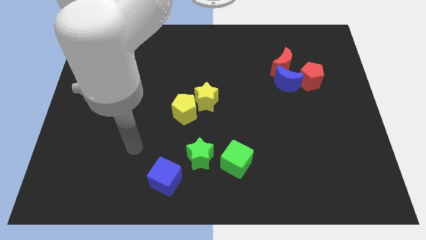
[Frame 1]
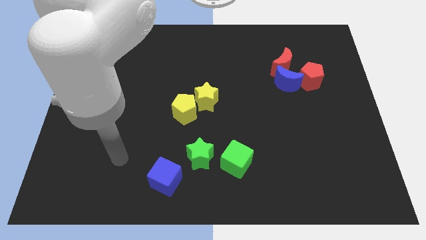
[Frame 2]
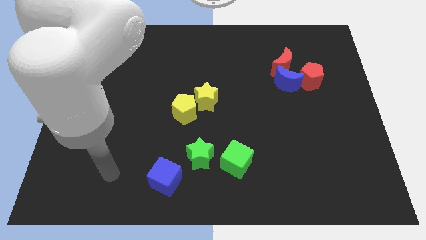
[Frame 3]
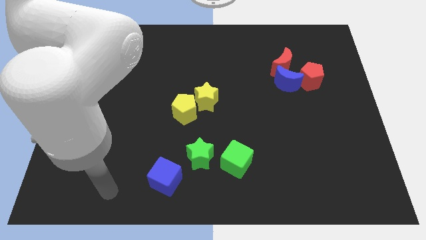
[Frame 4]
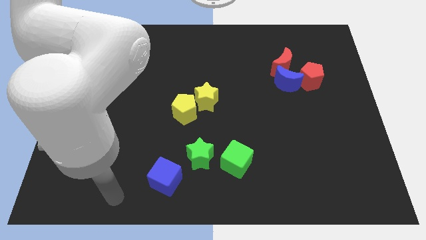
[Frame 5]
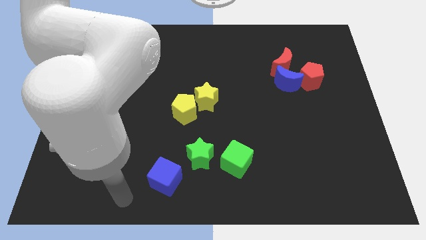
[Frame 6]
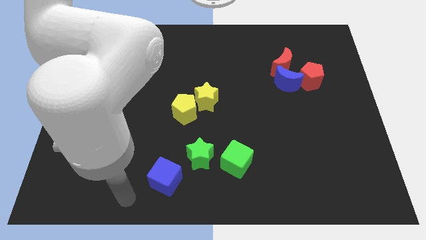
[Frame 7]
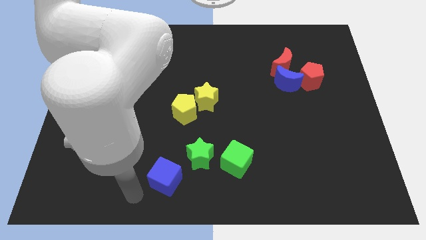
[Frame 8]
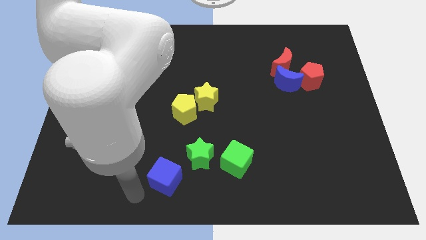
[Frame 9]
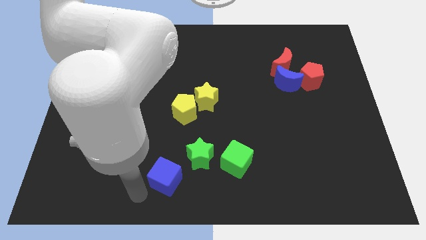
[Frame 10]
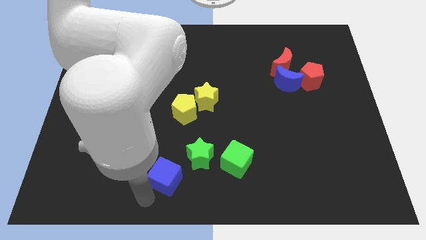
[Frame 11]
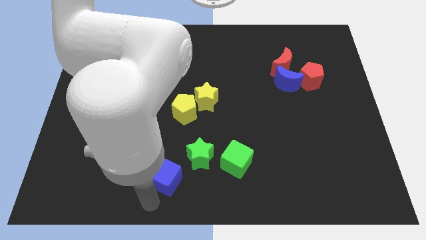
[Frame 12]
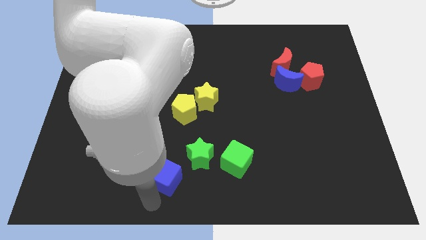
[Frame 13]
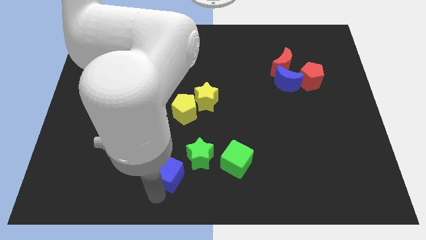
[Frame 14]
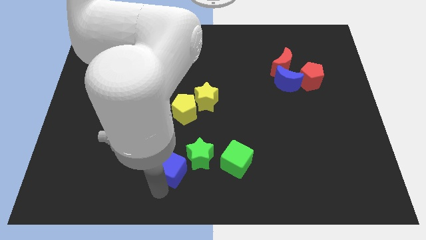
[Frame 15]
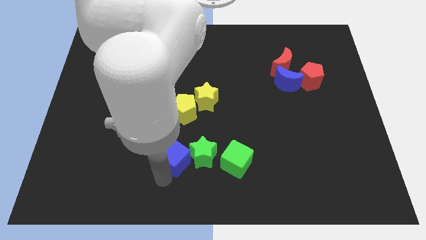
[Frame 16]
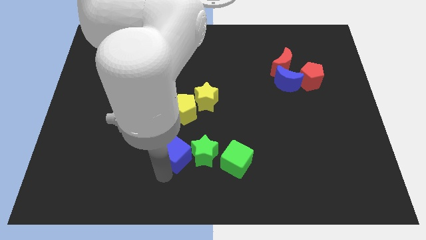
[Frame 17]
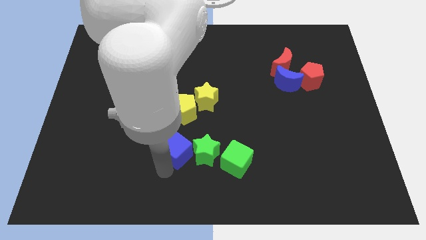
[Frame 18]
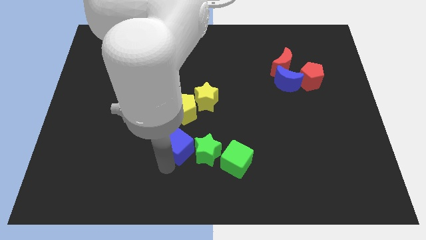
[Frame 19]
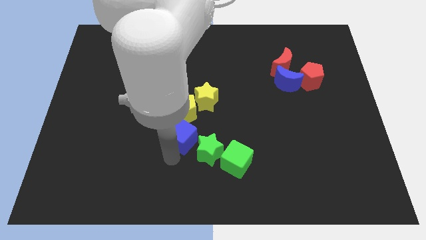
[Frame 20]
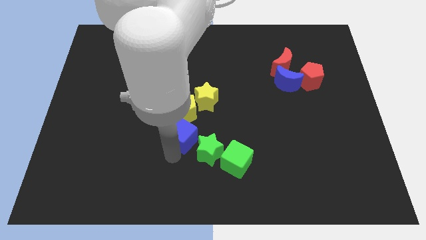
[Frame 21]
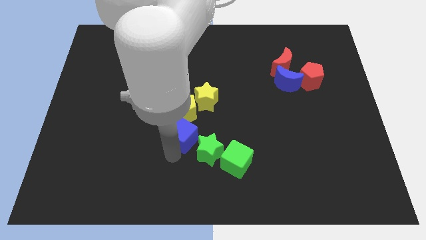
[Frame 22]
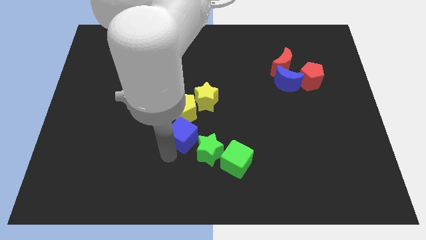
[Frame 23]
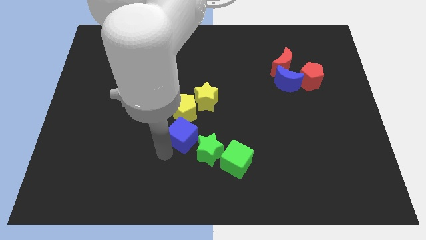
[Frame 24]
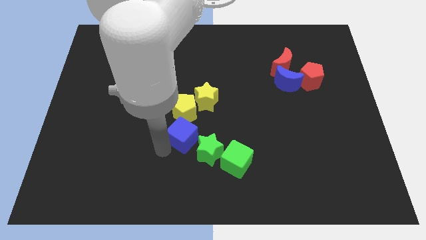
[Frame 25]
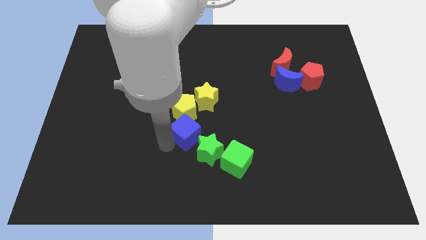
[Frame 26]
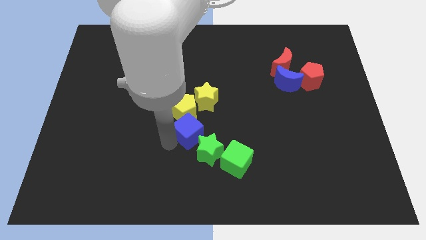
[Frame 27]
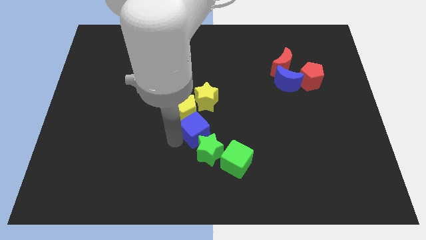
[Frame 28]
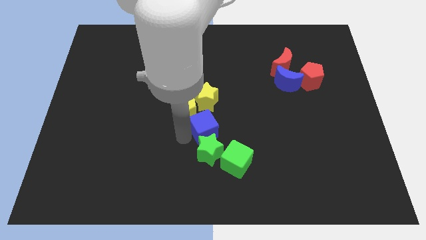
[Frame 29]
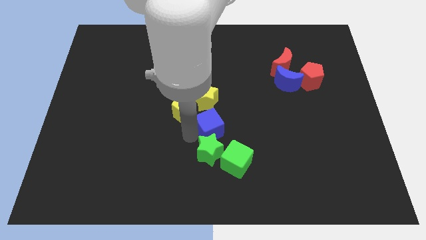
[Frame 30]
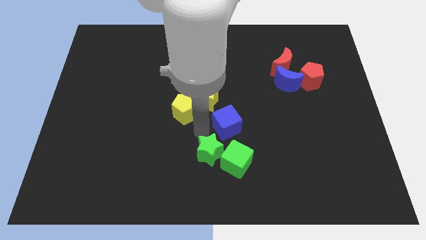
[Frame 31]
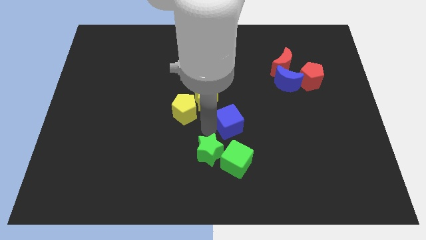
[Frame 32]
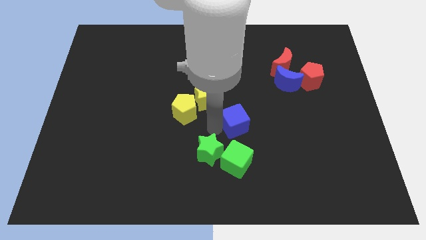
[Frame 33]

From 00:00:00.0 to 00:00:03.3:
push blue cube above green cube

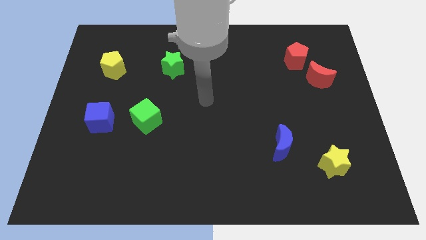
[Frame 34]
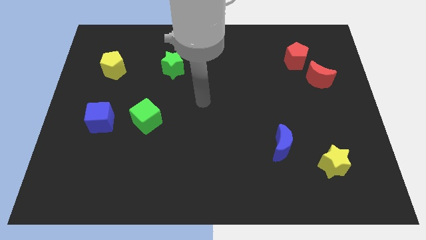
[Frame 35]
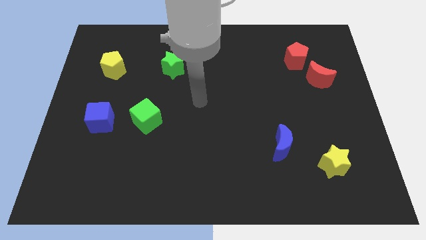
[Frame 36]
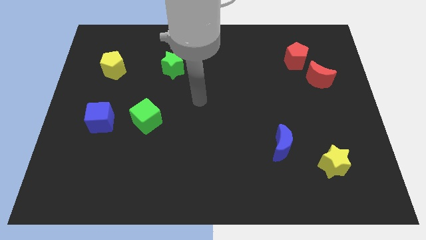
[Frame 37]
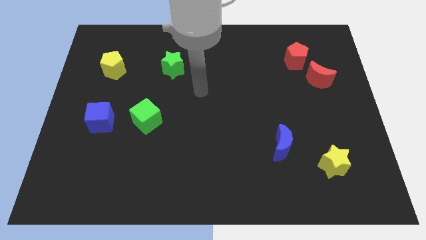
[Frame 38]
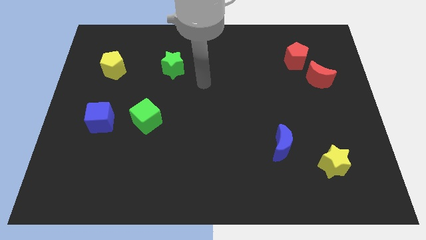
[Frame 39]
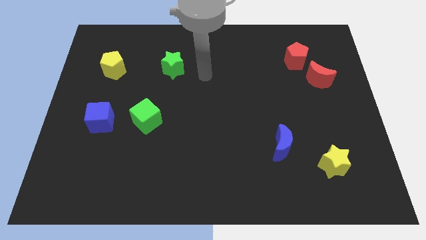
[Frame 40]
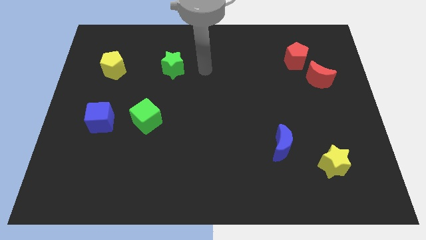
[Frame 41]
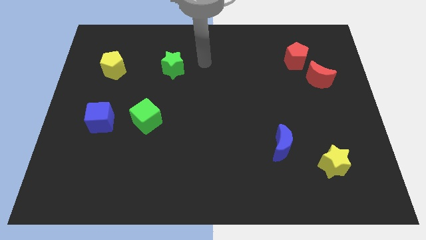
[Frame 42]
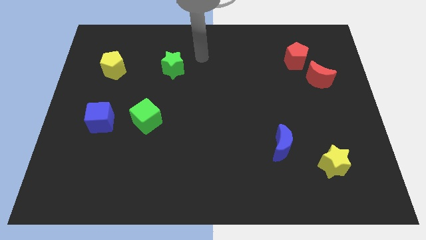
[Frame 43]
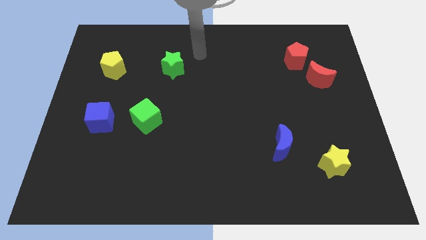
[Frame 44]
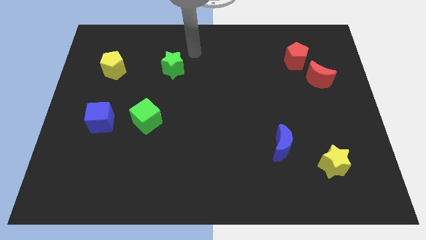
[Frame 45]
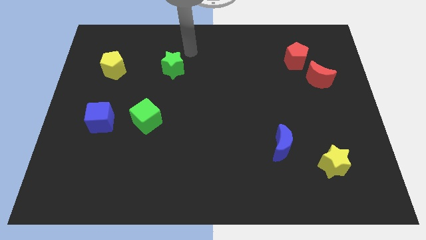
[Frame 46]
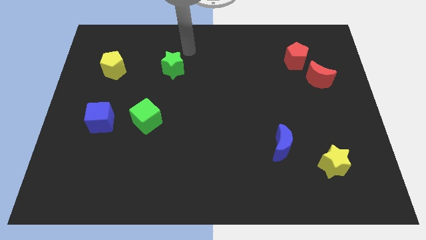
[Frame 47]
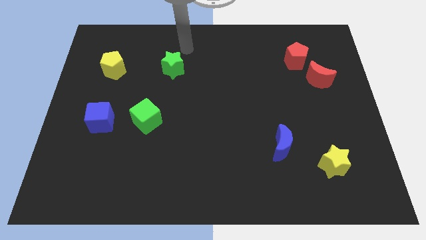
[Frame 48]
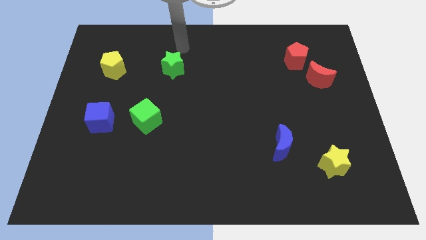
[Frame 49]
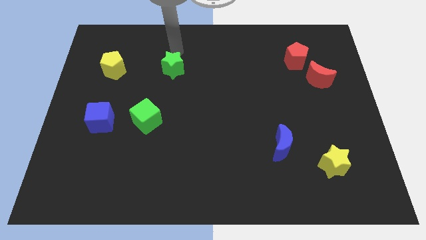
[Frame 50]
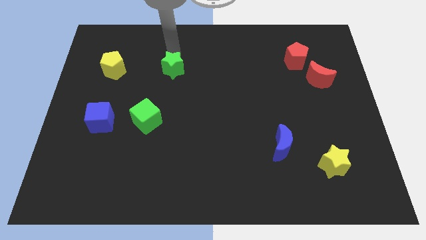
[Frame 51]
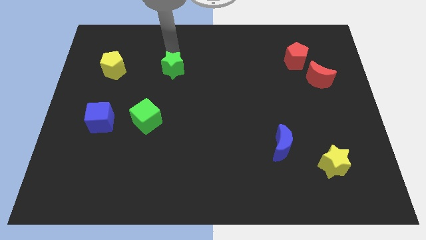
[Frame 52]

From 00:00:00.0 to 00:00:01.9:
move your arm towards the green star

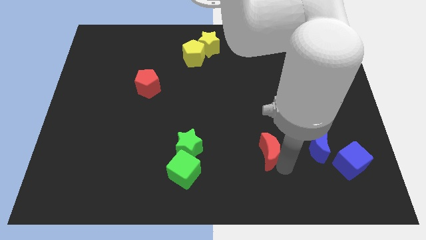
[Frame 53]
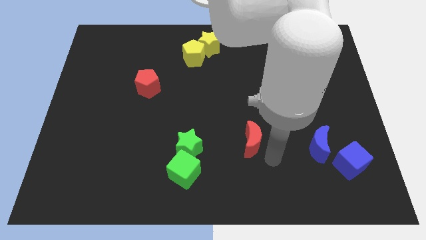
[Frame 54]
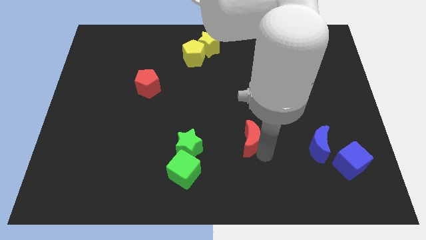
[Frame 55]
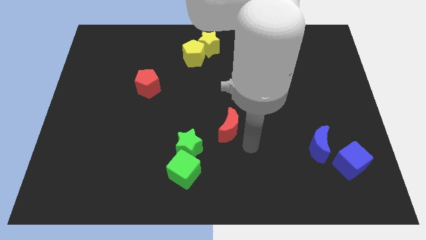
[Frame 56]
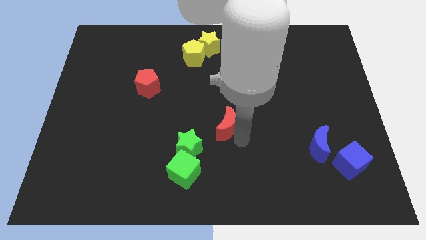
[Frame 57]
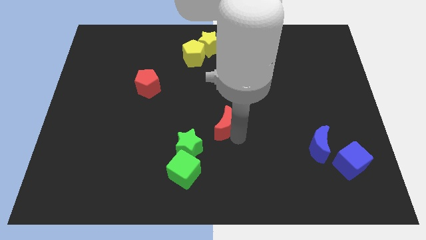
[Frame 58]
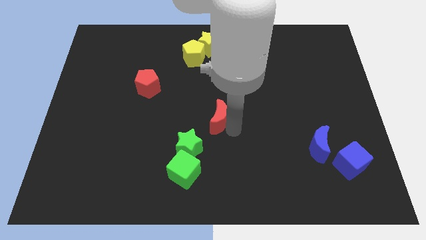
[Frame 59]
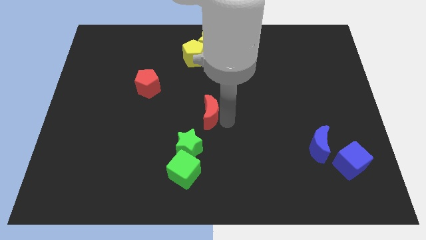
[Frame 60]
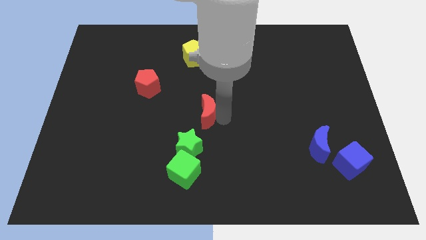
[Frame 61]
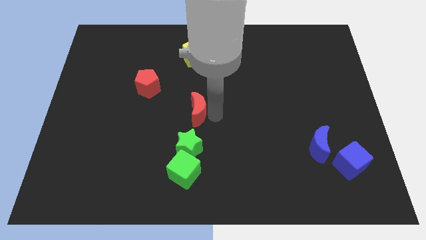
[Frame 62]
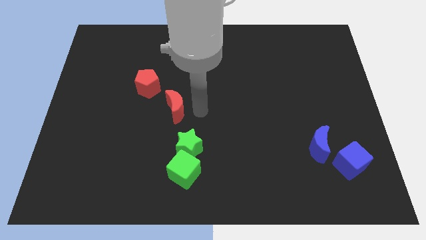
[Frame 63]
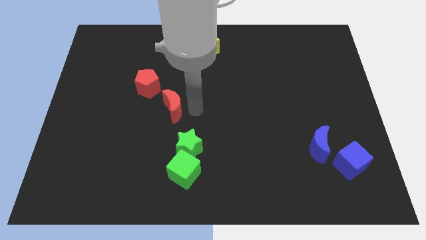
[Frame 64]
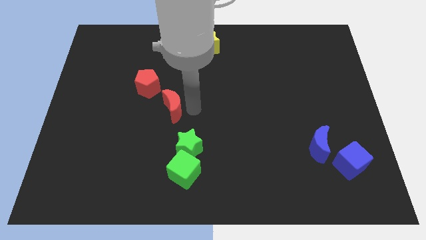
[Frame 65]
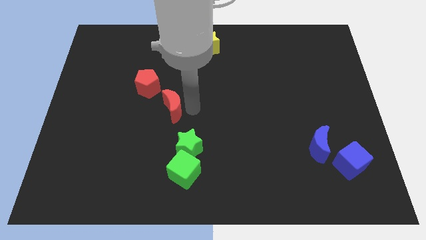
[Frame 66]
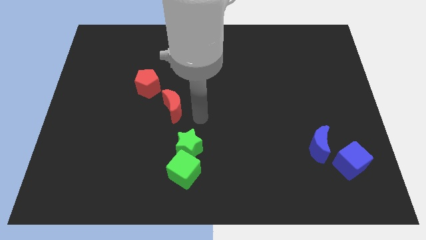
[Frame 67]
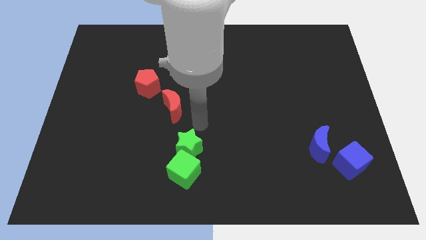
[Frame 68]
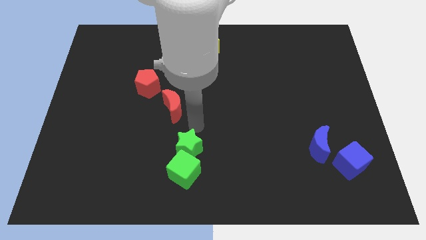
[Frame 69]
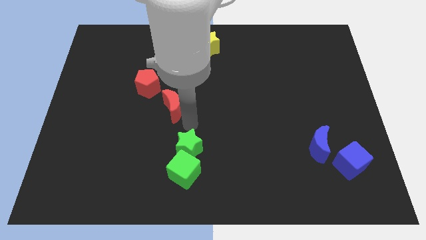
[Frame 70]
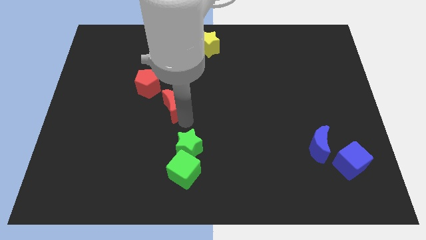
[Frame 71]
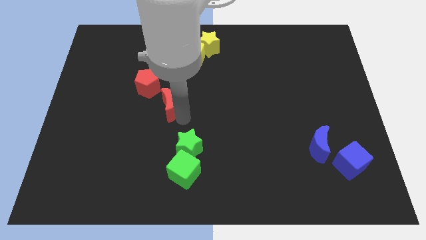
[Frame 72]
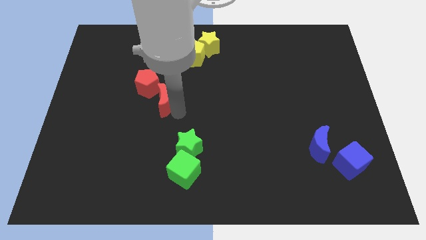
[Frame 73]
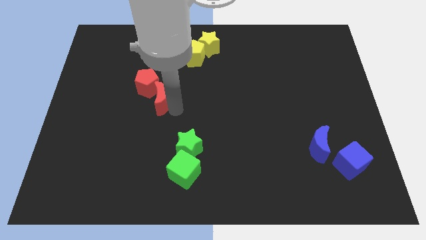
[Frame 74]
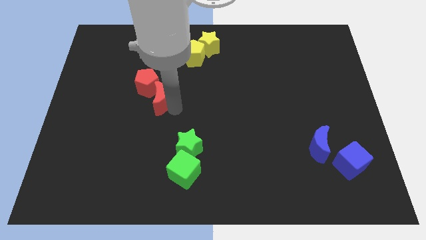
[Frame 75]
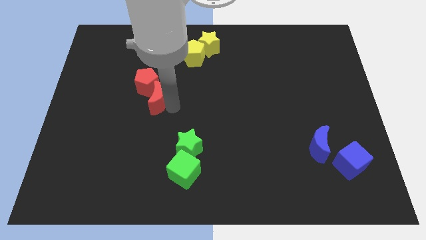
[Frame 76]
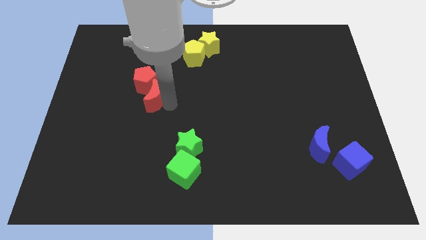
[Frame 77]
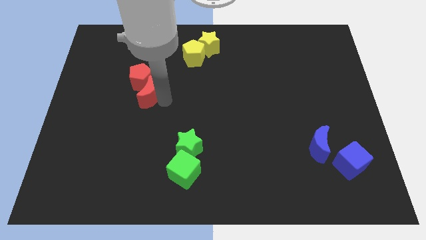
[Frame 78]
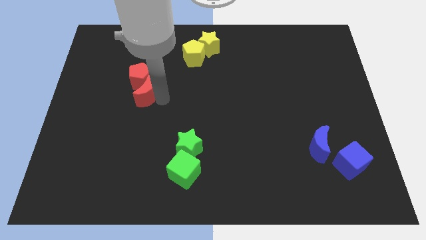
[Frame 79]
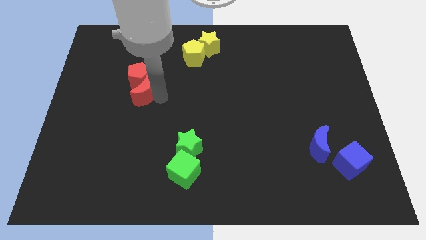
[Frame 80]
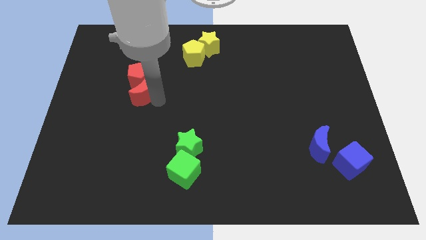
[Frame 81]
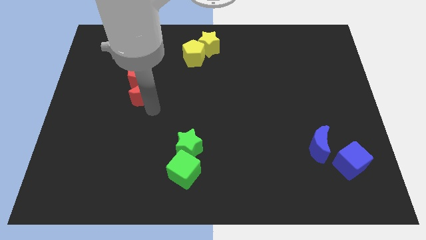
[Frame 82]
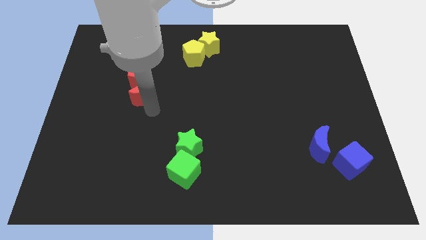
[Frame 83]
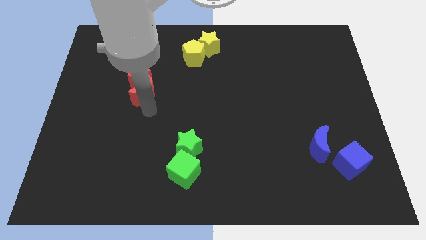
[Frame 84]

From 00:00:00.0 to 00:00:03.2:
slide red moon to red pentagon

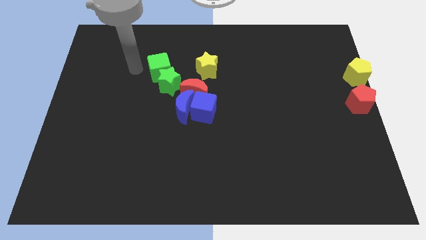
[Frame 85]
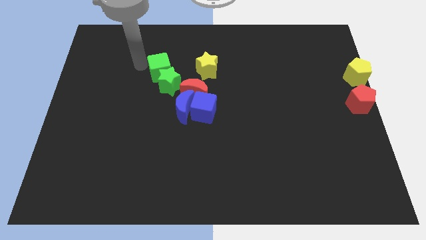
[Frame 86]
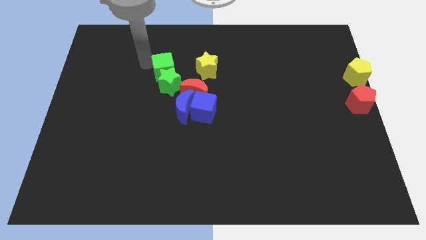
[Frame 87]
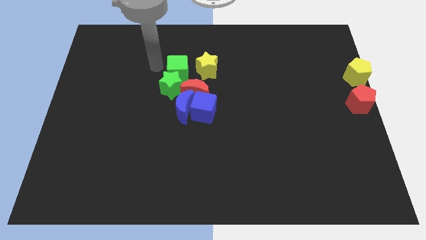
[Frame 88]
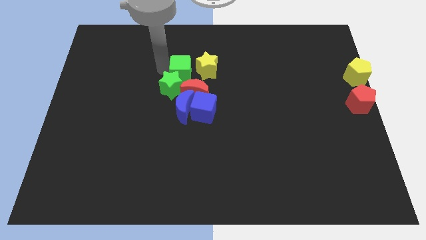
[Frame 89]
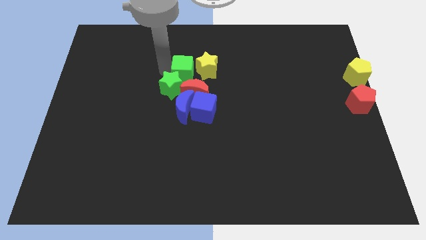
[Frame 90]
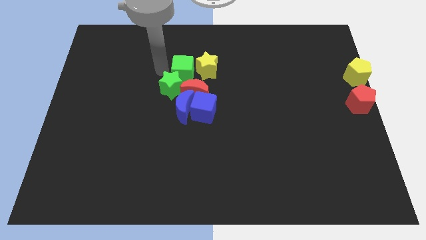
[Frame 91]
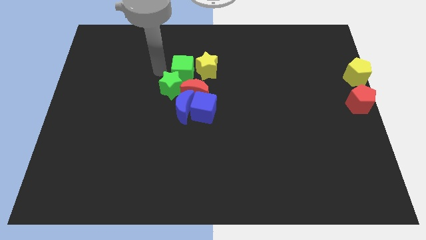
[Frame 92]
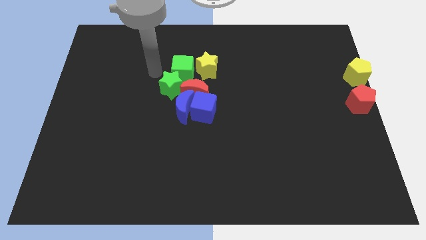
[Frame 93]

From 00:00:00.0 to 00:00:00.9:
move the green cube close to the yellow star
